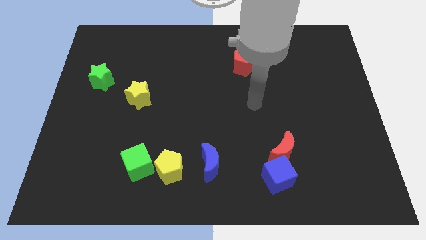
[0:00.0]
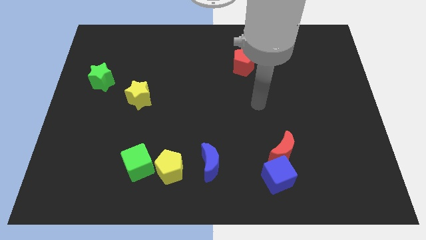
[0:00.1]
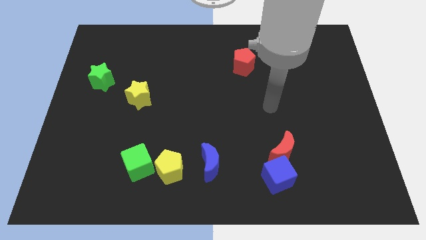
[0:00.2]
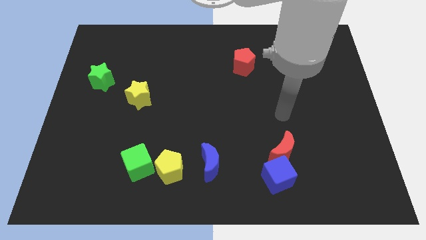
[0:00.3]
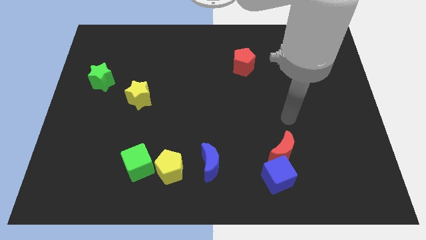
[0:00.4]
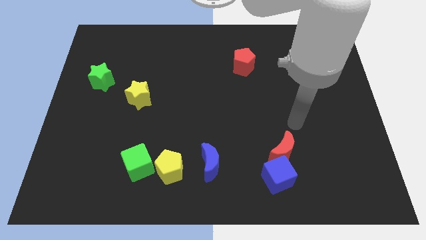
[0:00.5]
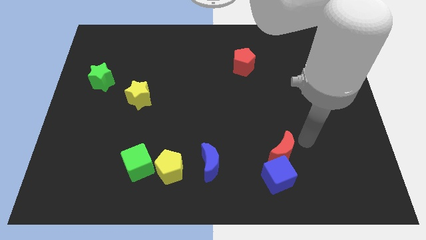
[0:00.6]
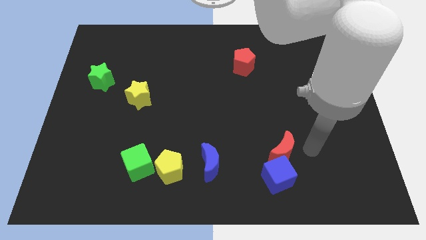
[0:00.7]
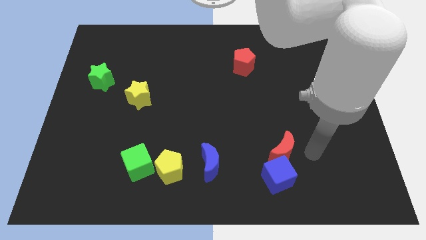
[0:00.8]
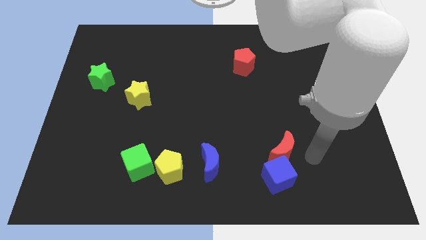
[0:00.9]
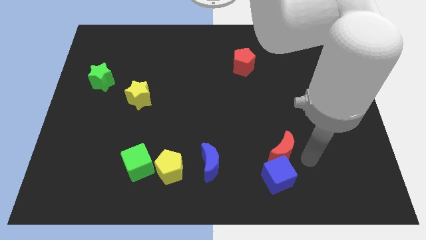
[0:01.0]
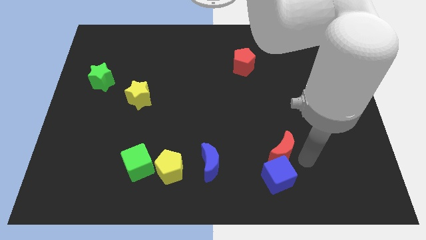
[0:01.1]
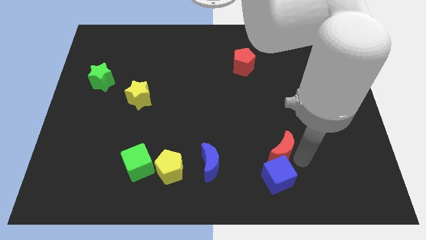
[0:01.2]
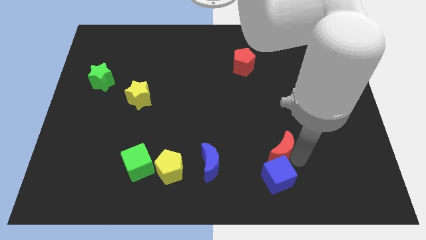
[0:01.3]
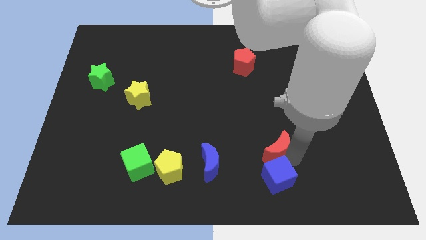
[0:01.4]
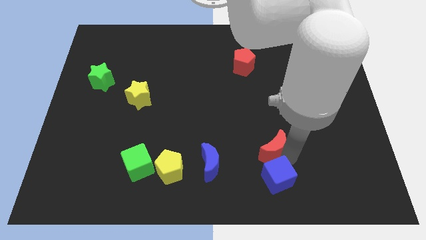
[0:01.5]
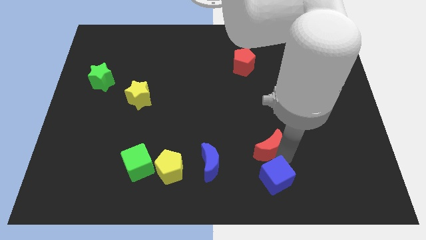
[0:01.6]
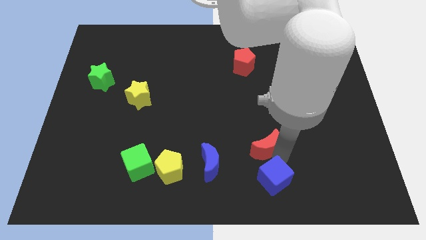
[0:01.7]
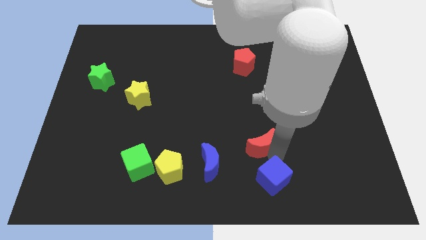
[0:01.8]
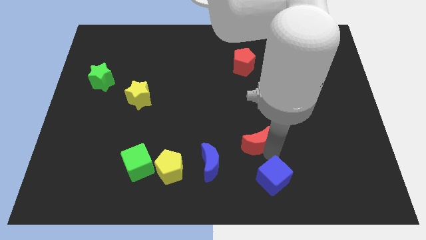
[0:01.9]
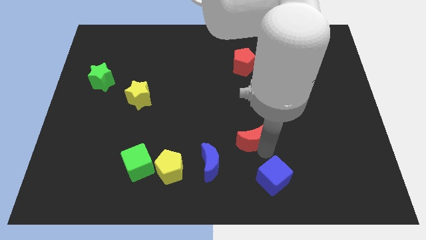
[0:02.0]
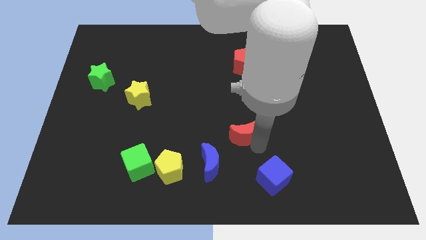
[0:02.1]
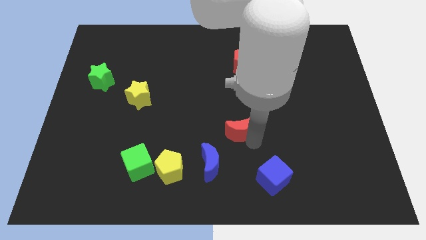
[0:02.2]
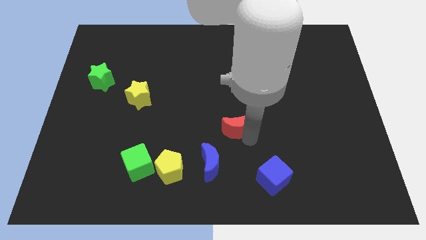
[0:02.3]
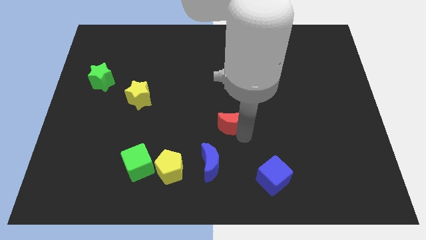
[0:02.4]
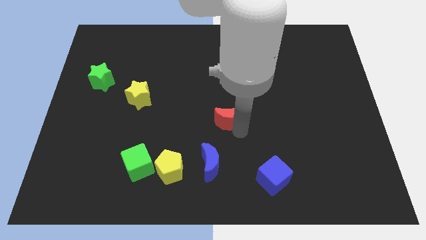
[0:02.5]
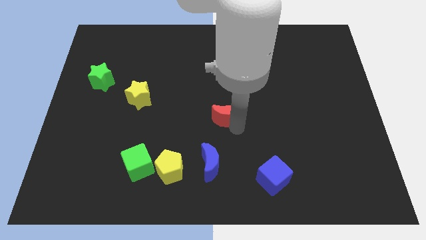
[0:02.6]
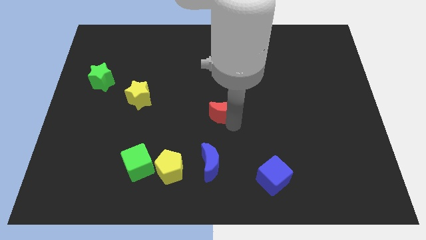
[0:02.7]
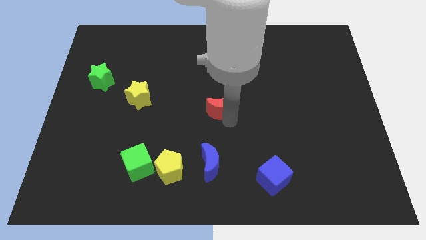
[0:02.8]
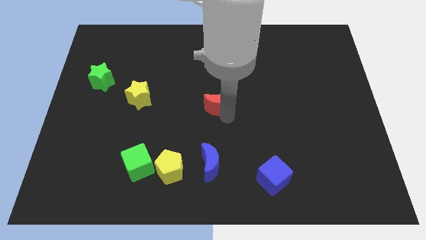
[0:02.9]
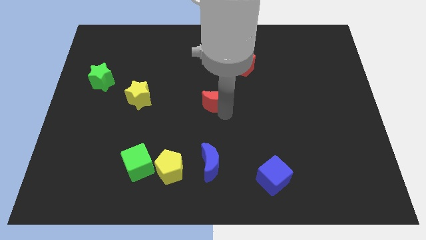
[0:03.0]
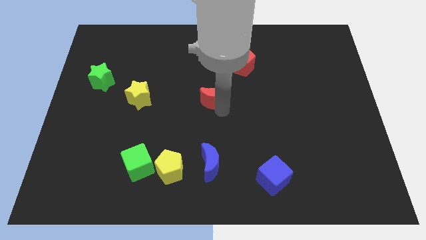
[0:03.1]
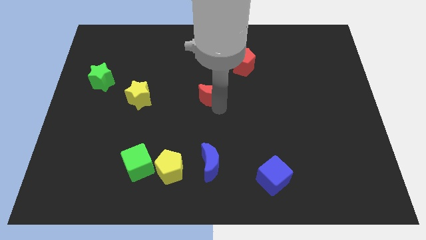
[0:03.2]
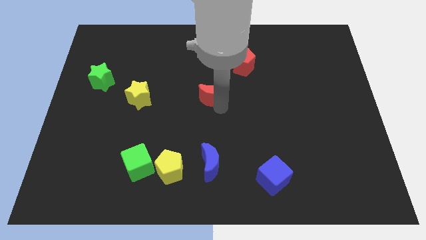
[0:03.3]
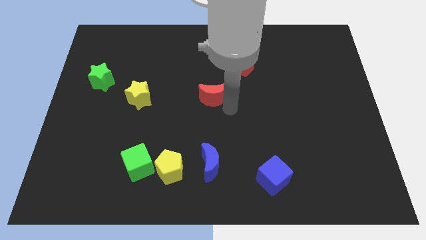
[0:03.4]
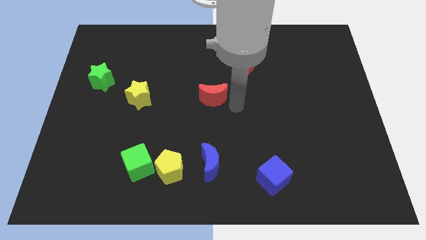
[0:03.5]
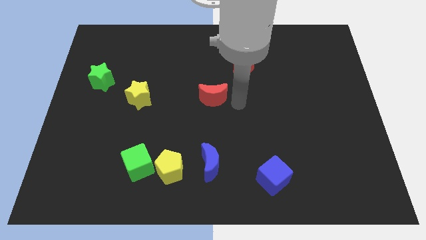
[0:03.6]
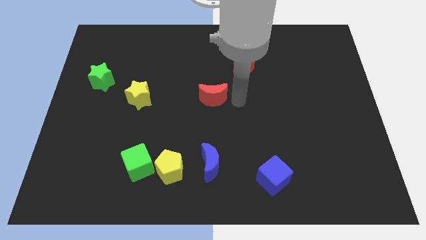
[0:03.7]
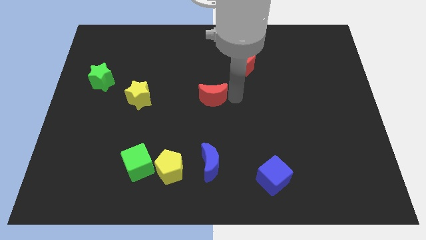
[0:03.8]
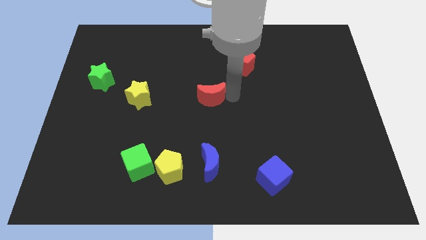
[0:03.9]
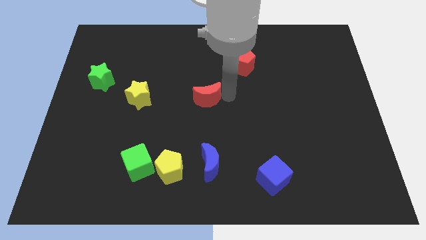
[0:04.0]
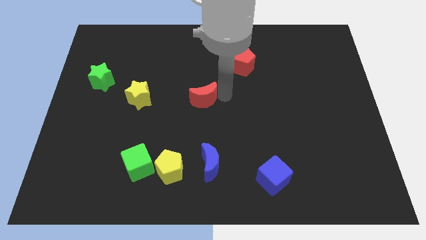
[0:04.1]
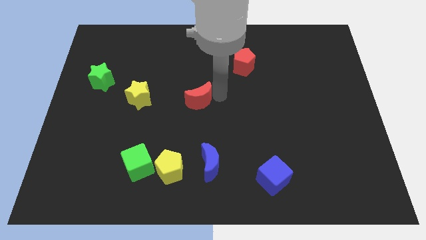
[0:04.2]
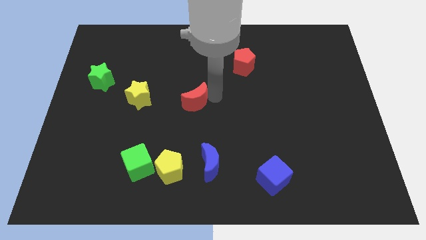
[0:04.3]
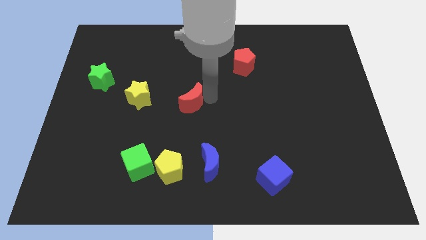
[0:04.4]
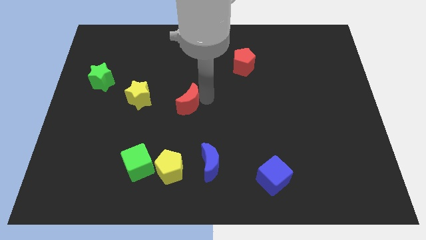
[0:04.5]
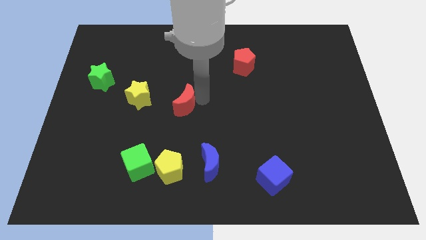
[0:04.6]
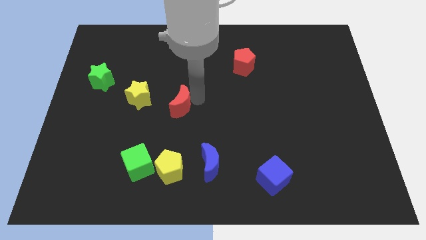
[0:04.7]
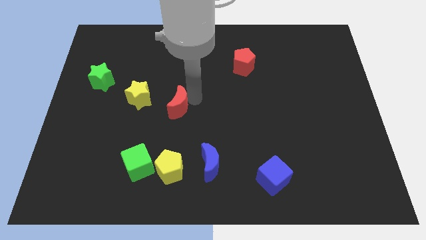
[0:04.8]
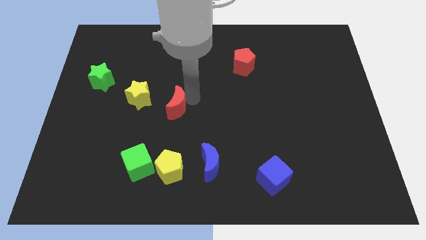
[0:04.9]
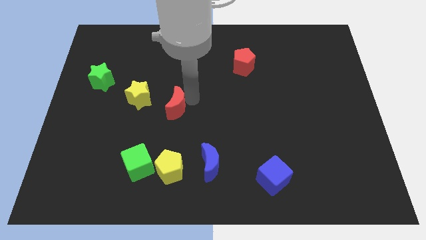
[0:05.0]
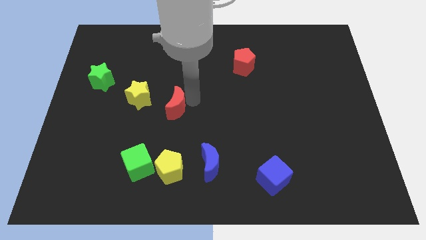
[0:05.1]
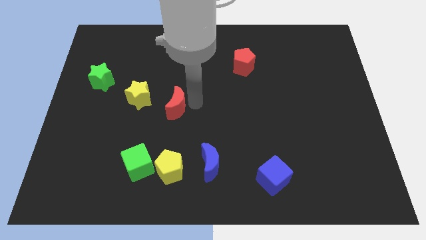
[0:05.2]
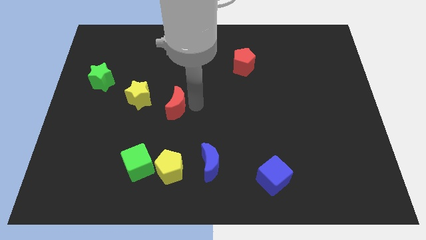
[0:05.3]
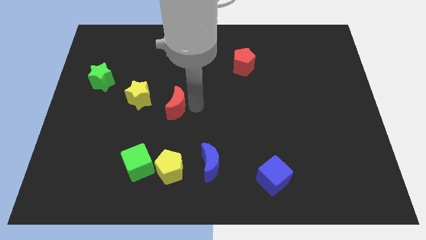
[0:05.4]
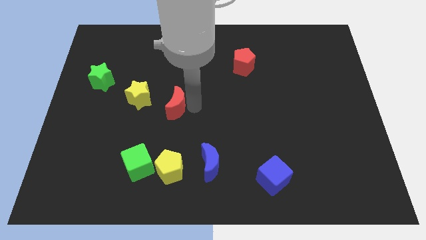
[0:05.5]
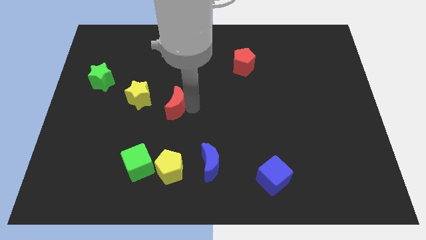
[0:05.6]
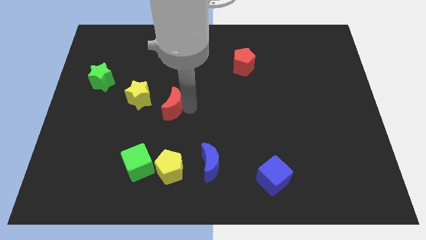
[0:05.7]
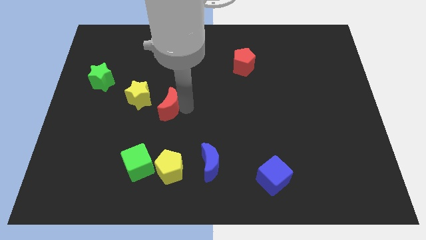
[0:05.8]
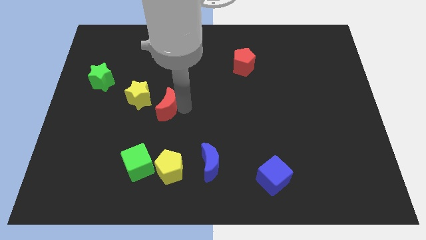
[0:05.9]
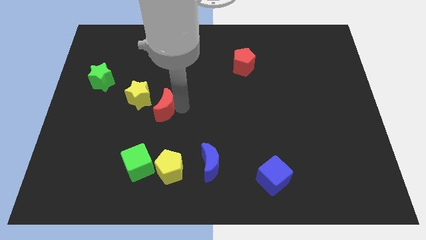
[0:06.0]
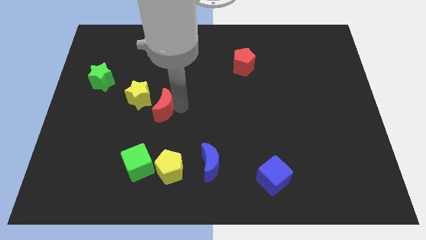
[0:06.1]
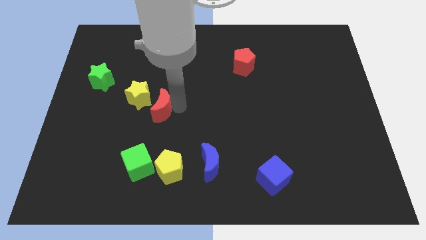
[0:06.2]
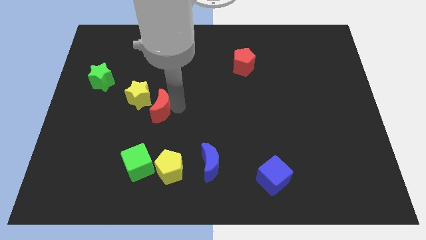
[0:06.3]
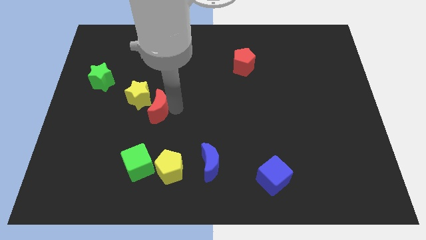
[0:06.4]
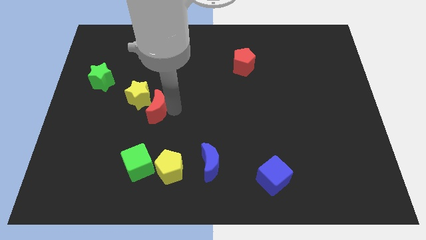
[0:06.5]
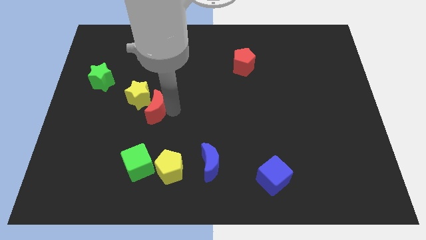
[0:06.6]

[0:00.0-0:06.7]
move the red moon towards the yellow star

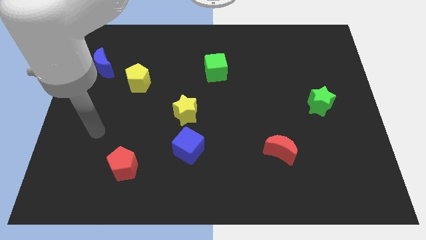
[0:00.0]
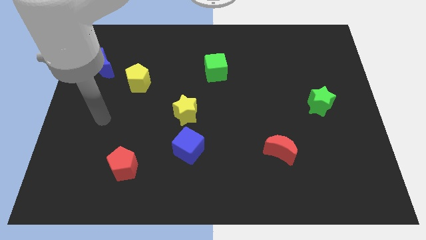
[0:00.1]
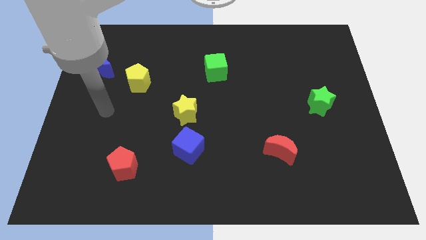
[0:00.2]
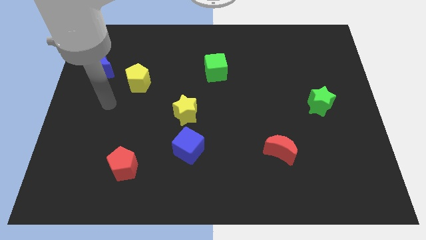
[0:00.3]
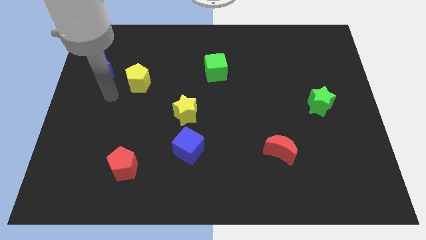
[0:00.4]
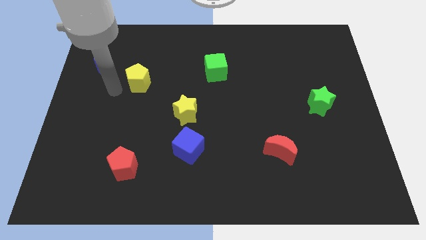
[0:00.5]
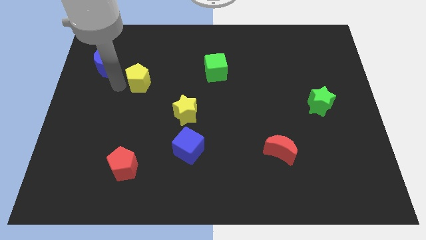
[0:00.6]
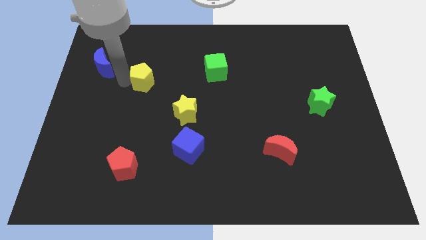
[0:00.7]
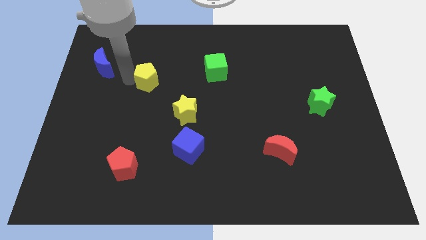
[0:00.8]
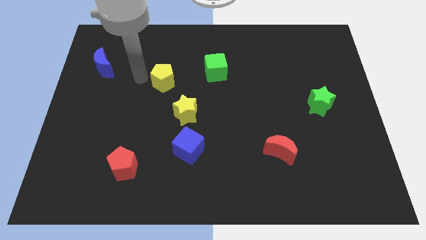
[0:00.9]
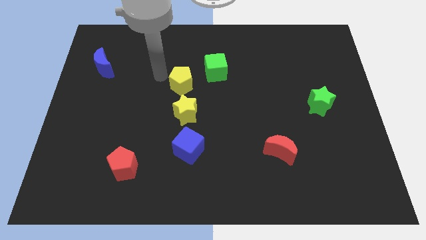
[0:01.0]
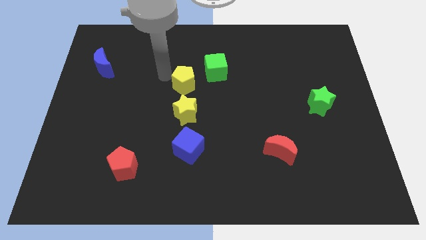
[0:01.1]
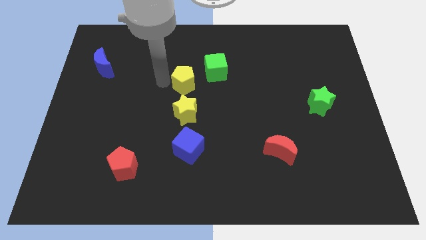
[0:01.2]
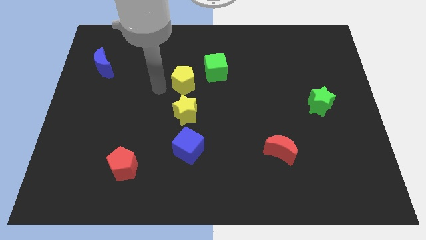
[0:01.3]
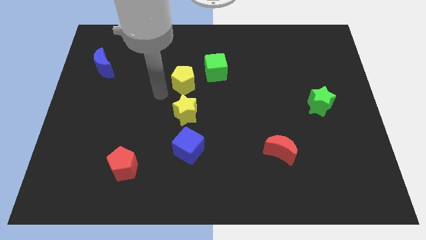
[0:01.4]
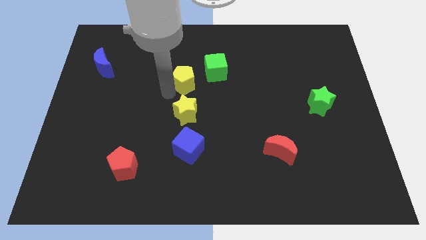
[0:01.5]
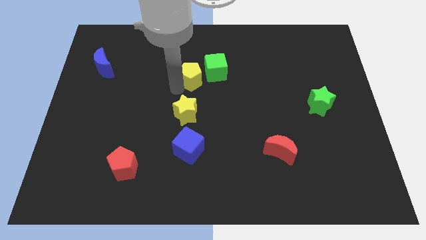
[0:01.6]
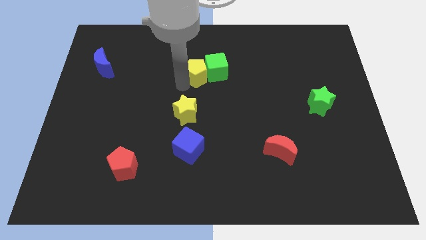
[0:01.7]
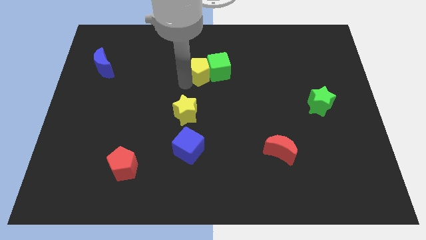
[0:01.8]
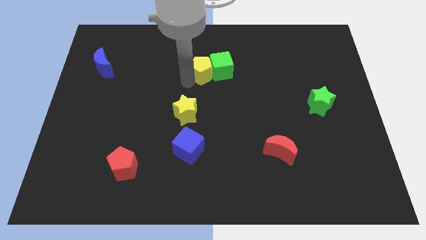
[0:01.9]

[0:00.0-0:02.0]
move the yellow pentagon towards the green cube
